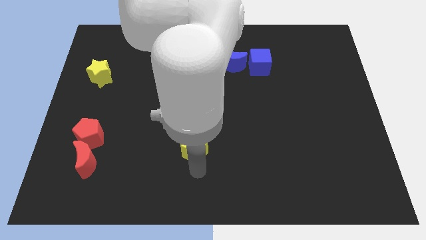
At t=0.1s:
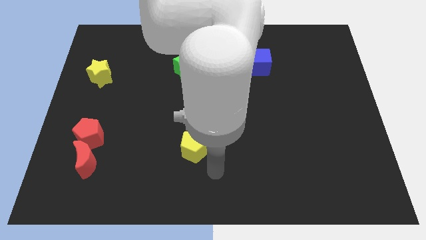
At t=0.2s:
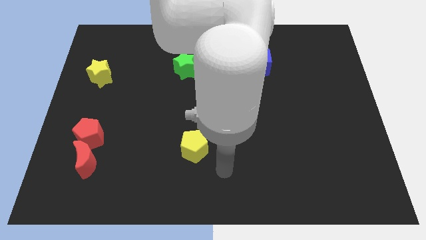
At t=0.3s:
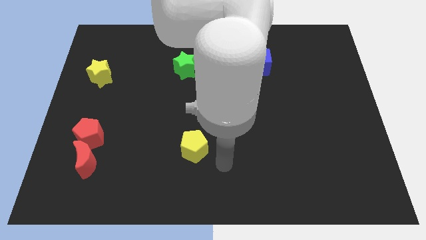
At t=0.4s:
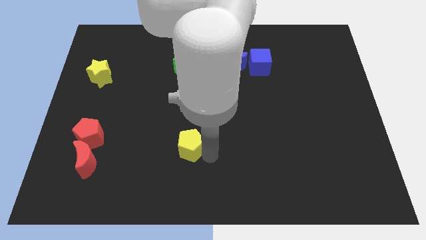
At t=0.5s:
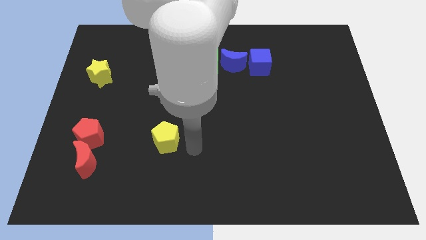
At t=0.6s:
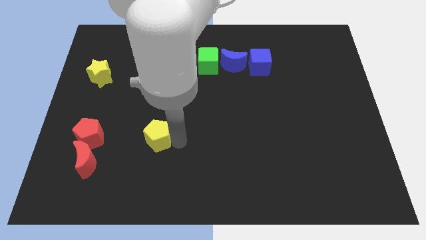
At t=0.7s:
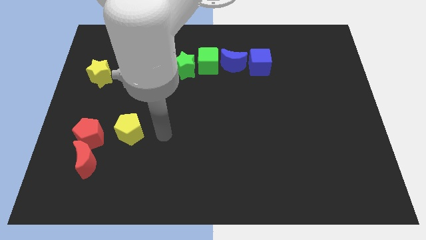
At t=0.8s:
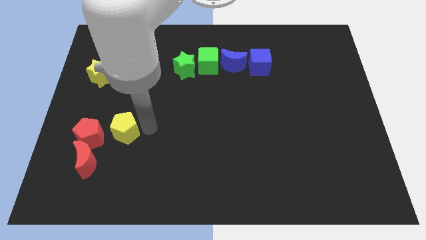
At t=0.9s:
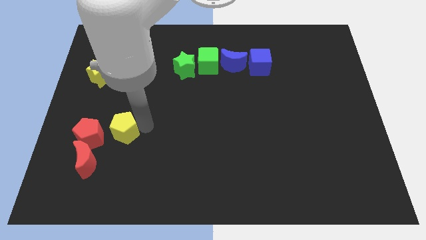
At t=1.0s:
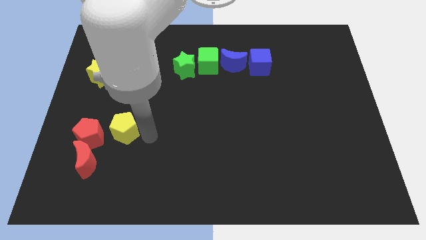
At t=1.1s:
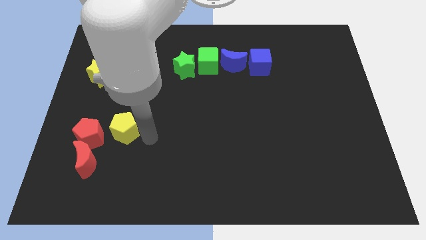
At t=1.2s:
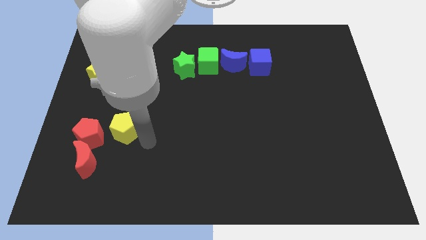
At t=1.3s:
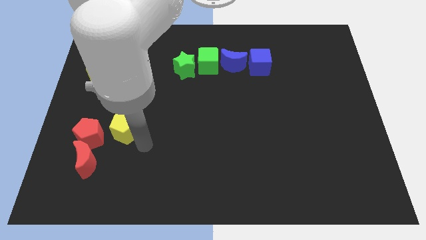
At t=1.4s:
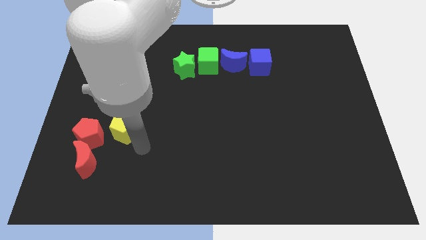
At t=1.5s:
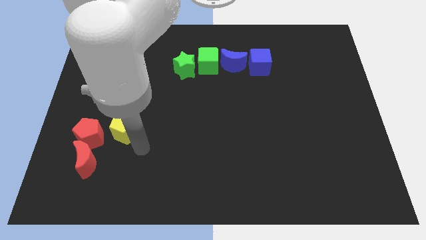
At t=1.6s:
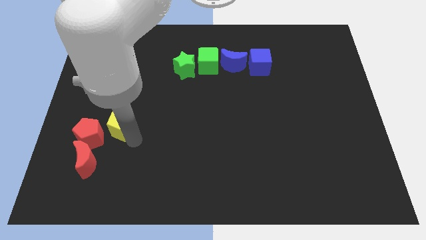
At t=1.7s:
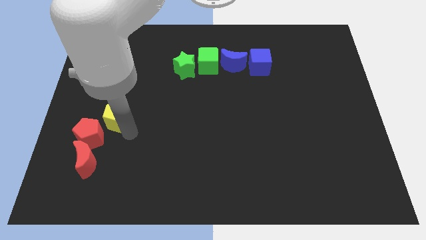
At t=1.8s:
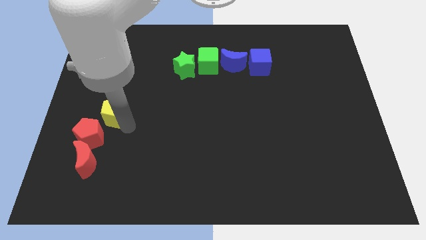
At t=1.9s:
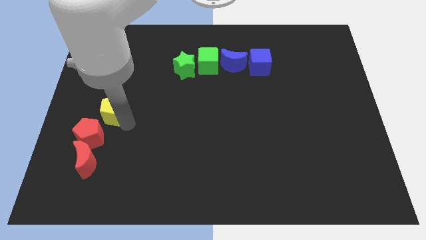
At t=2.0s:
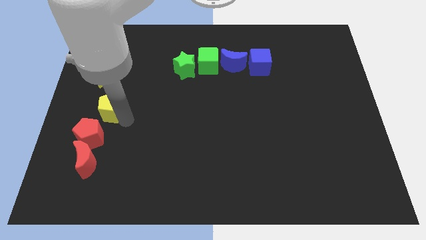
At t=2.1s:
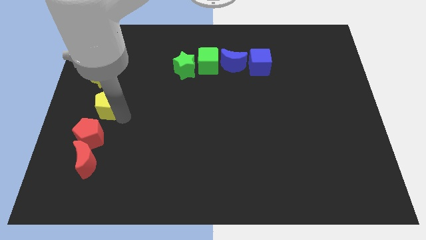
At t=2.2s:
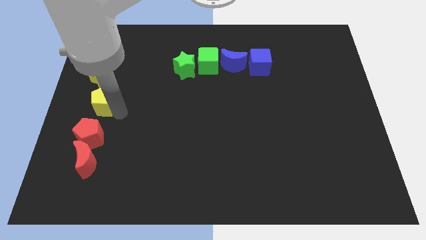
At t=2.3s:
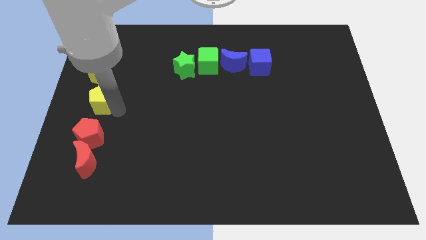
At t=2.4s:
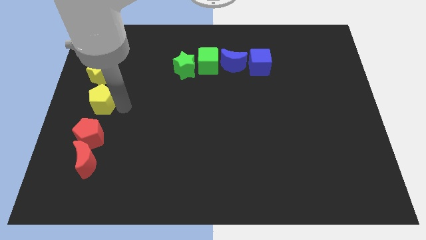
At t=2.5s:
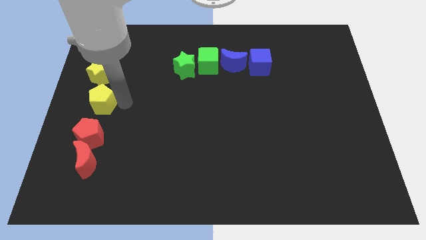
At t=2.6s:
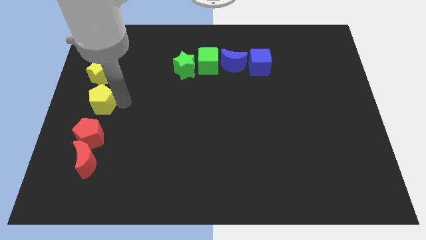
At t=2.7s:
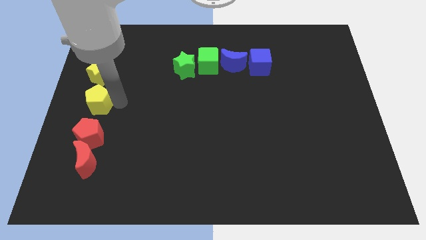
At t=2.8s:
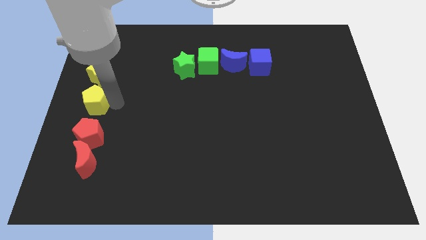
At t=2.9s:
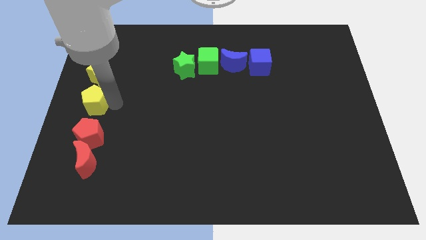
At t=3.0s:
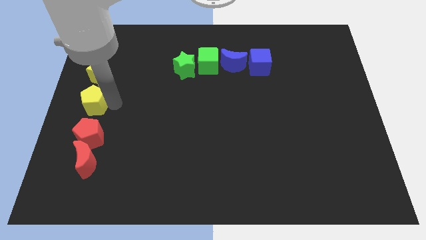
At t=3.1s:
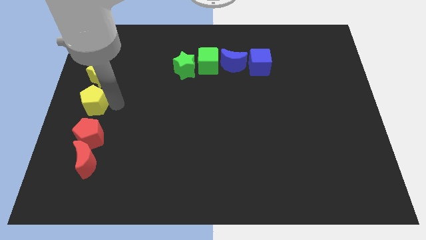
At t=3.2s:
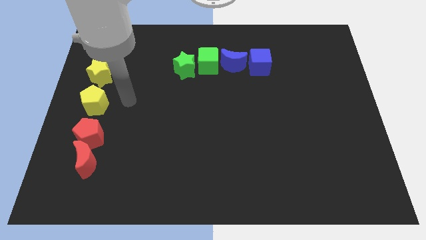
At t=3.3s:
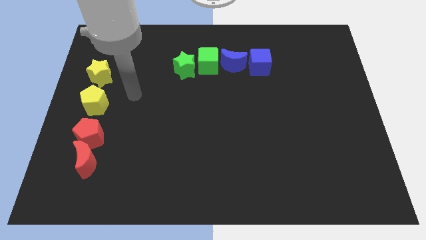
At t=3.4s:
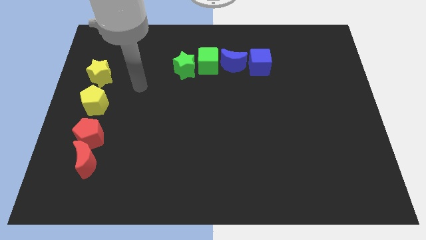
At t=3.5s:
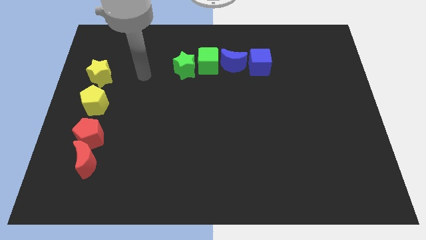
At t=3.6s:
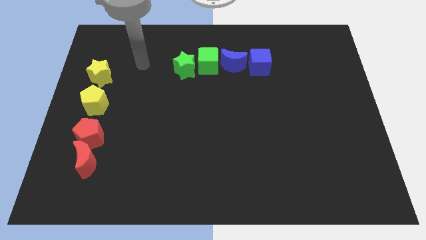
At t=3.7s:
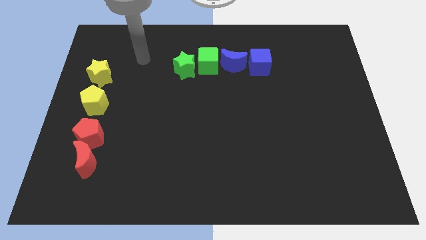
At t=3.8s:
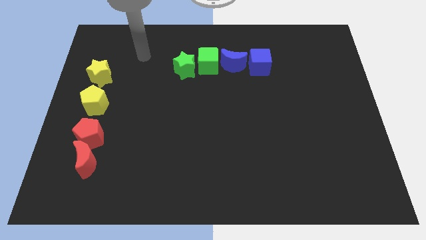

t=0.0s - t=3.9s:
move the yellow pentagon to the bottom of the yellow star

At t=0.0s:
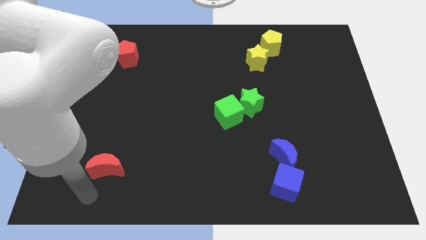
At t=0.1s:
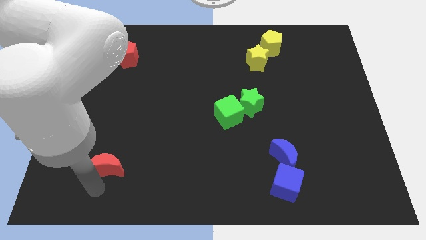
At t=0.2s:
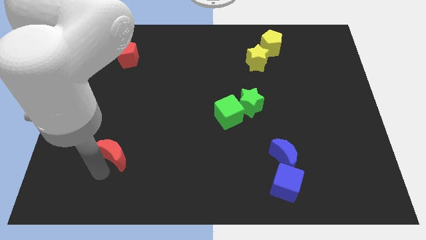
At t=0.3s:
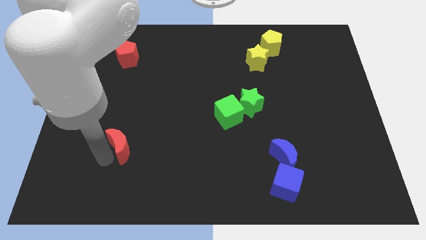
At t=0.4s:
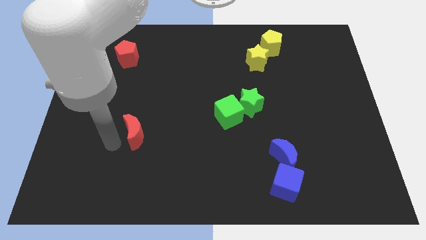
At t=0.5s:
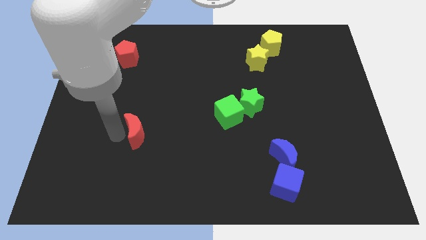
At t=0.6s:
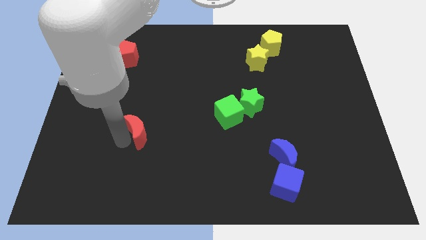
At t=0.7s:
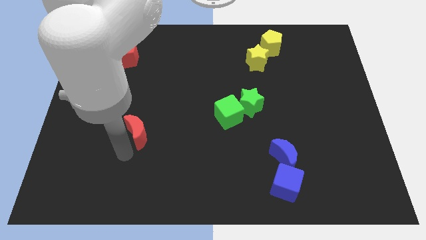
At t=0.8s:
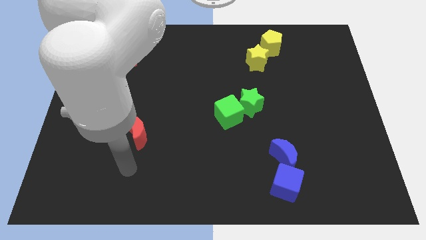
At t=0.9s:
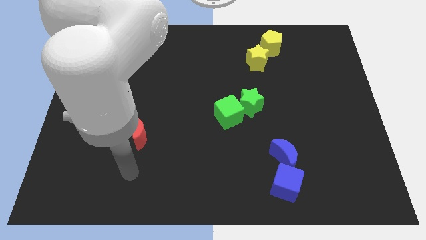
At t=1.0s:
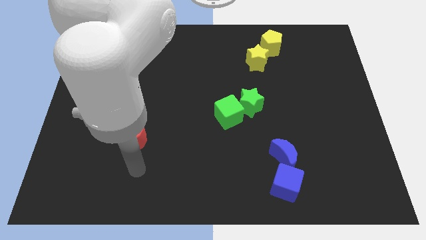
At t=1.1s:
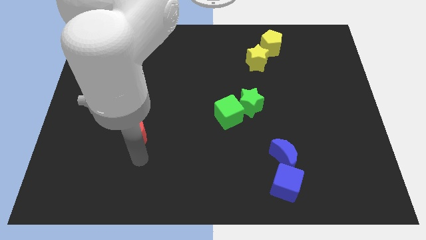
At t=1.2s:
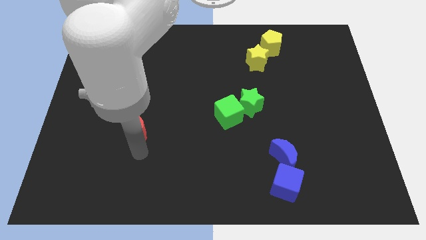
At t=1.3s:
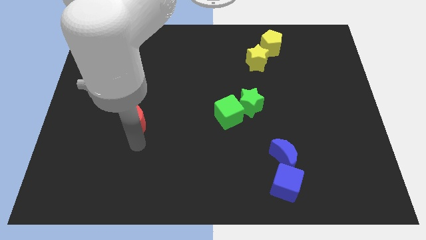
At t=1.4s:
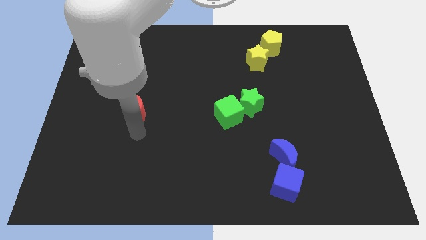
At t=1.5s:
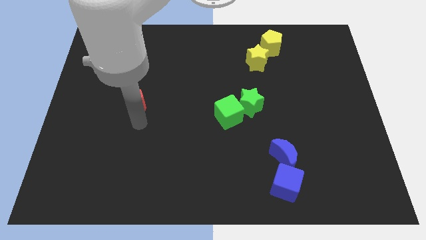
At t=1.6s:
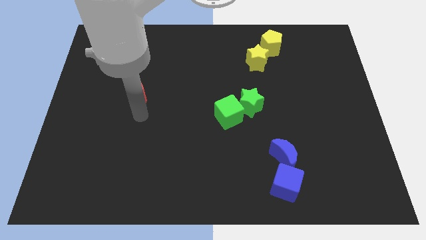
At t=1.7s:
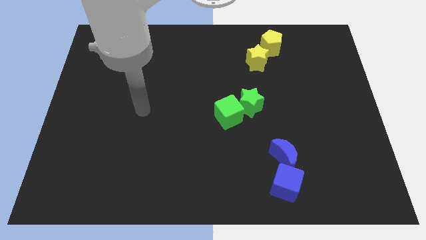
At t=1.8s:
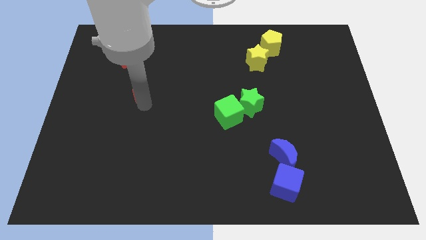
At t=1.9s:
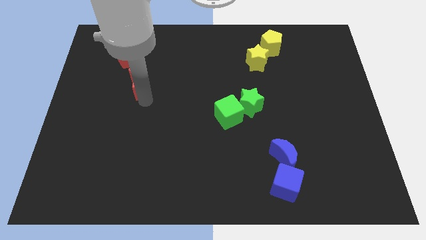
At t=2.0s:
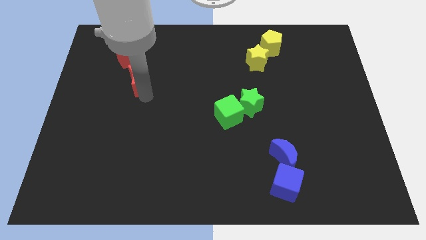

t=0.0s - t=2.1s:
move red crescent near red pentagon

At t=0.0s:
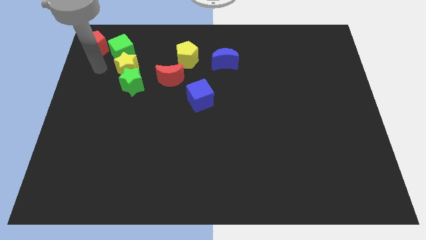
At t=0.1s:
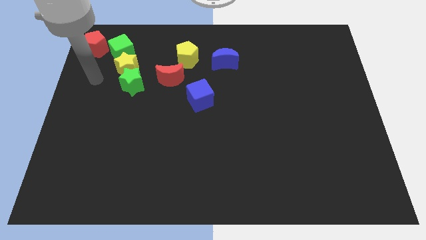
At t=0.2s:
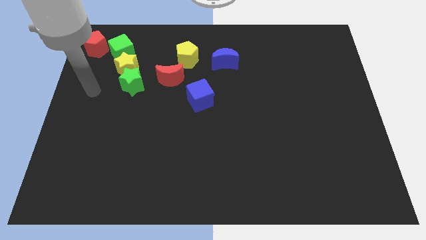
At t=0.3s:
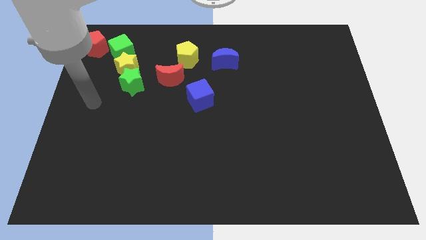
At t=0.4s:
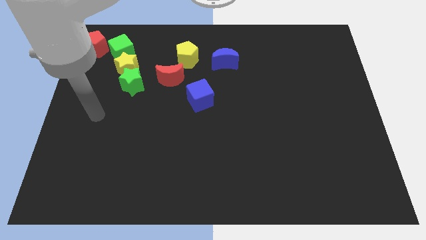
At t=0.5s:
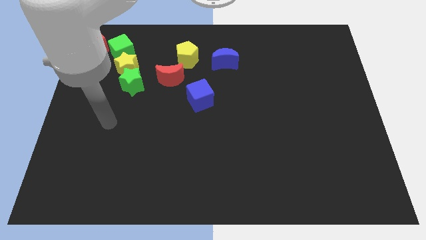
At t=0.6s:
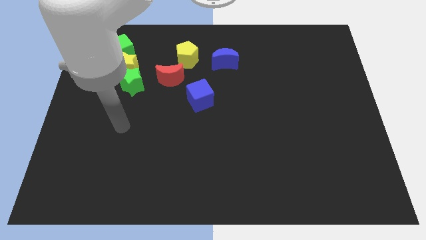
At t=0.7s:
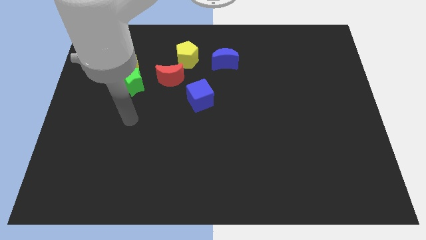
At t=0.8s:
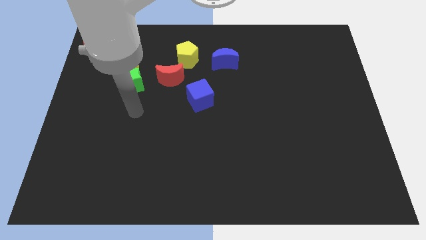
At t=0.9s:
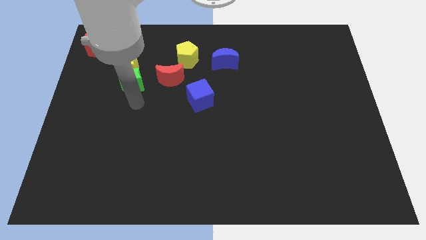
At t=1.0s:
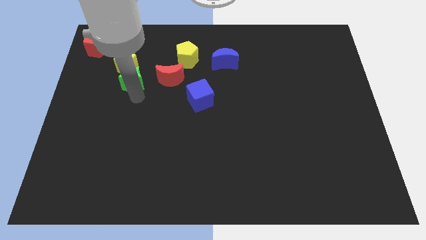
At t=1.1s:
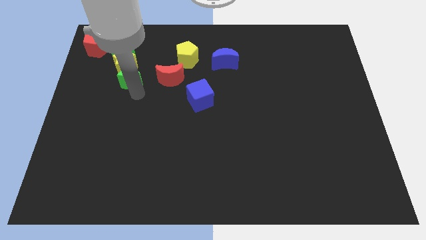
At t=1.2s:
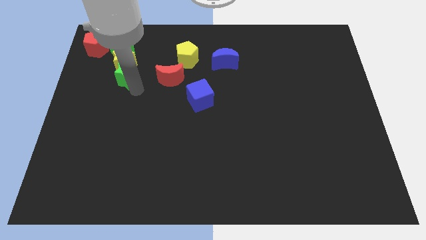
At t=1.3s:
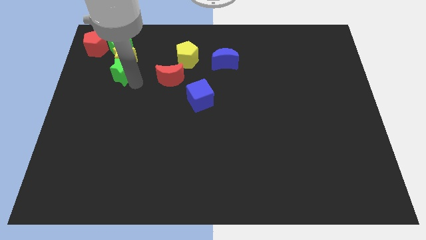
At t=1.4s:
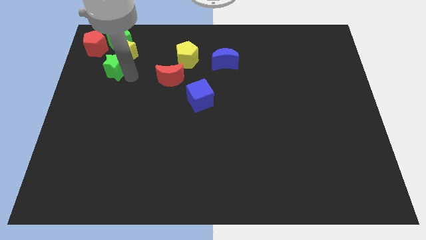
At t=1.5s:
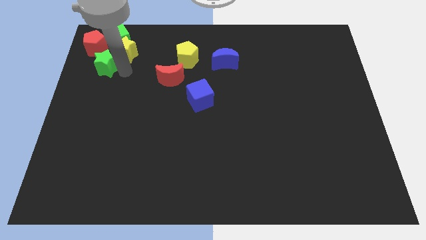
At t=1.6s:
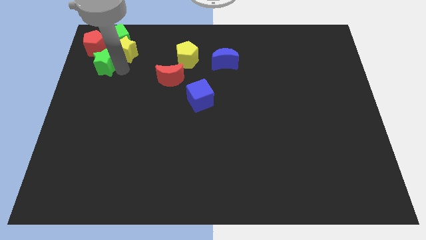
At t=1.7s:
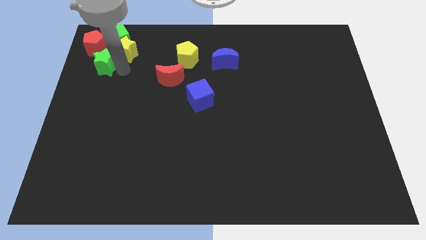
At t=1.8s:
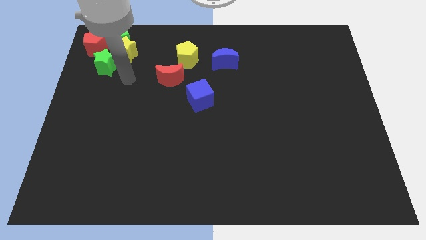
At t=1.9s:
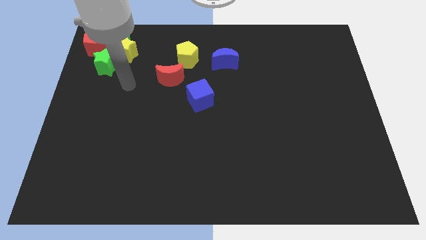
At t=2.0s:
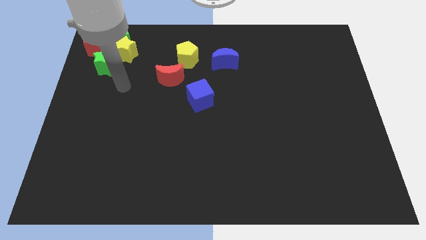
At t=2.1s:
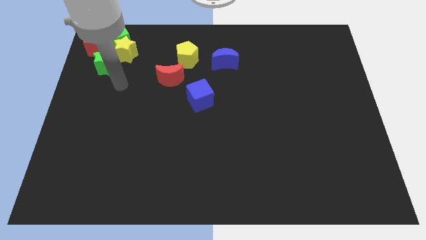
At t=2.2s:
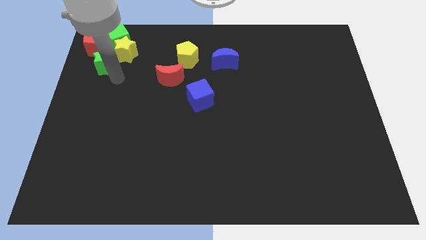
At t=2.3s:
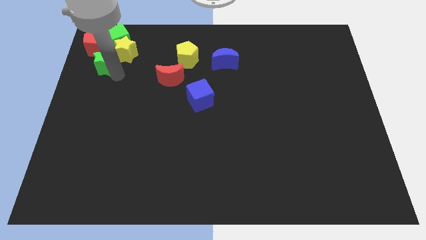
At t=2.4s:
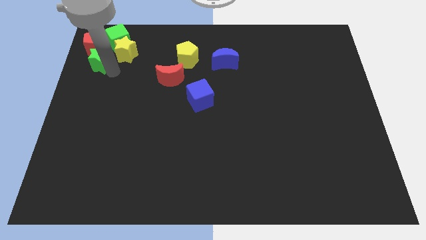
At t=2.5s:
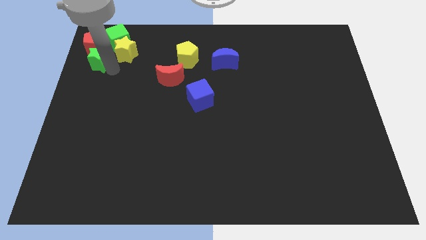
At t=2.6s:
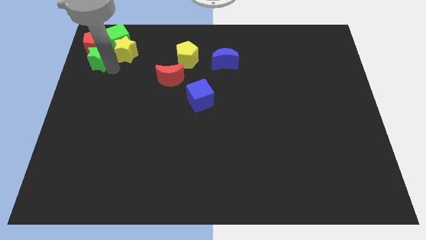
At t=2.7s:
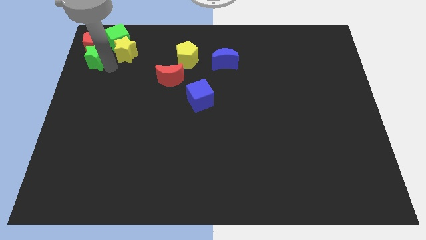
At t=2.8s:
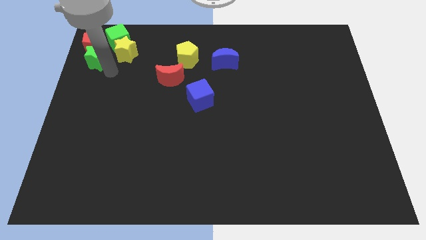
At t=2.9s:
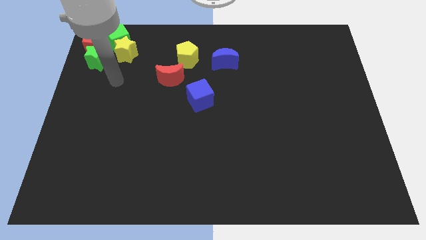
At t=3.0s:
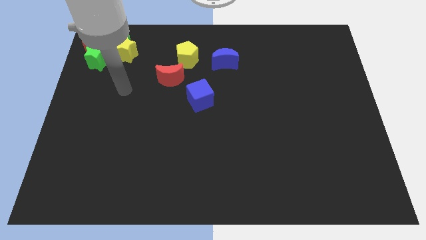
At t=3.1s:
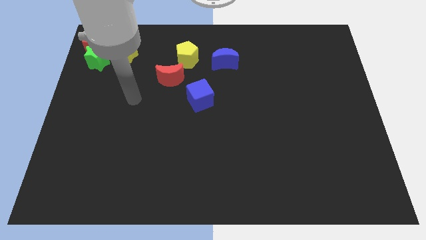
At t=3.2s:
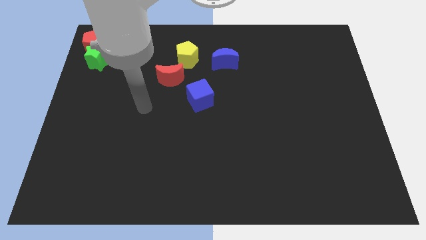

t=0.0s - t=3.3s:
move the group of the blocks to the top left of the board
